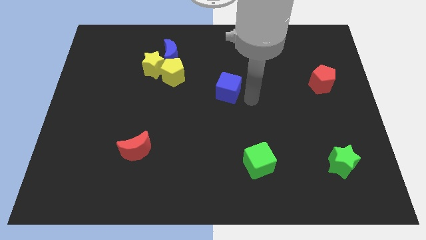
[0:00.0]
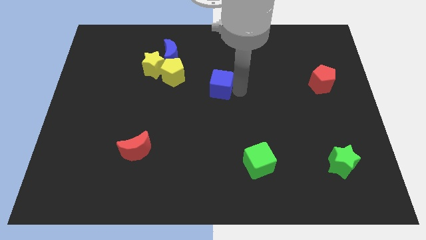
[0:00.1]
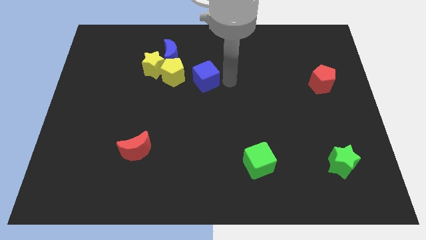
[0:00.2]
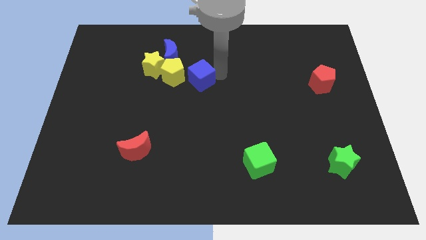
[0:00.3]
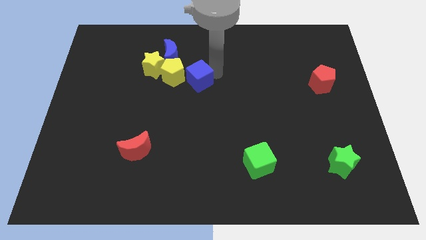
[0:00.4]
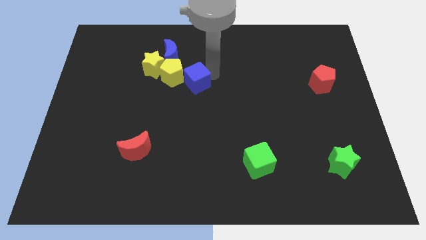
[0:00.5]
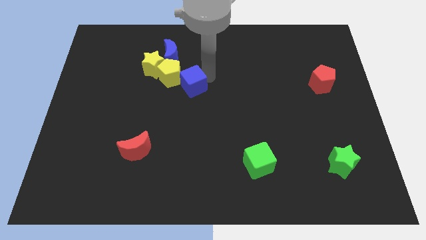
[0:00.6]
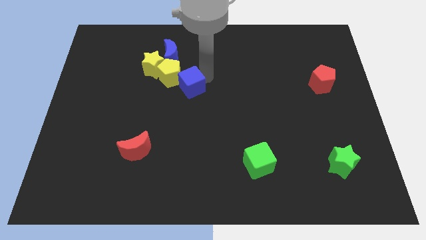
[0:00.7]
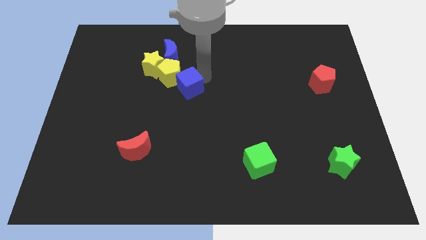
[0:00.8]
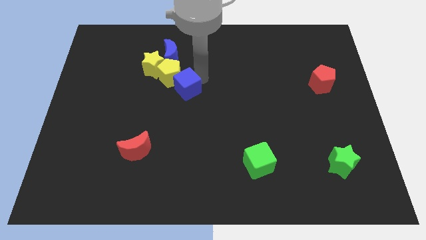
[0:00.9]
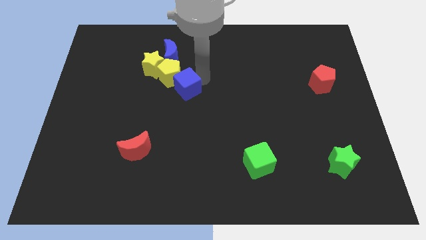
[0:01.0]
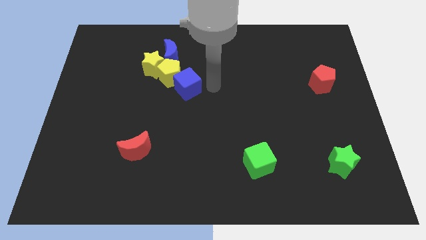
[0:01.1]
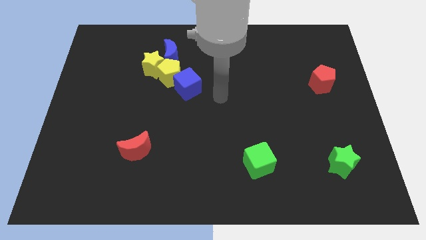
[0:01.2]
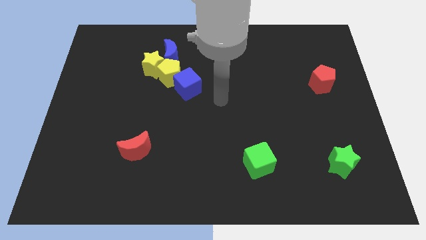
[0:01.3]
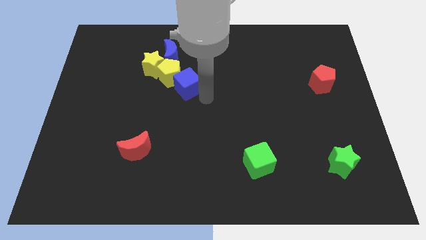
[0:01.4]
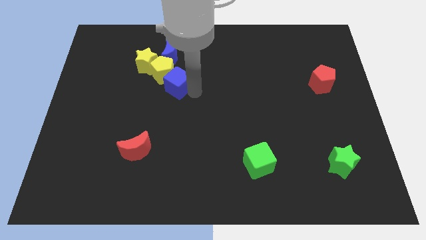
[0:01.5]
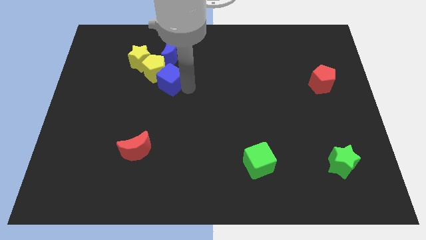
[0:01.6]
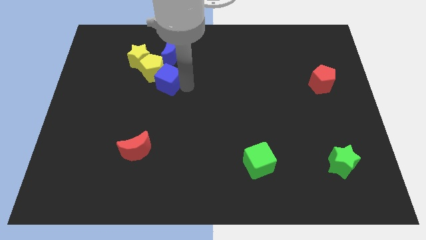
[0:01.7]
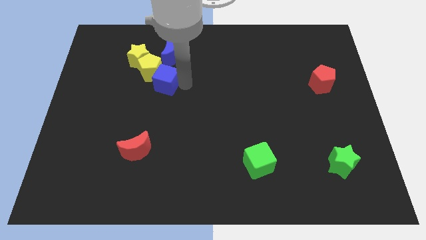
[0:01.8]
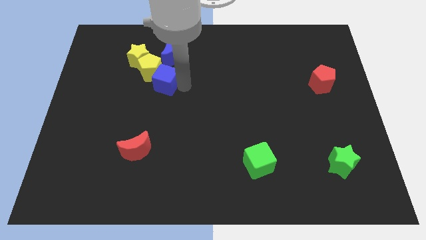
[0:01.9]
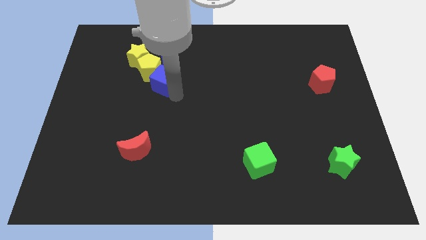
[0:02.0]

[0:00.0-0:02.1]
push the blue cube into the yellow pentagon

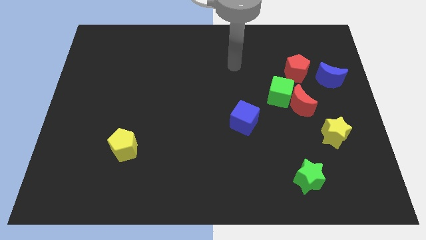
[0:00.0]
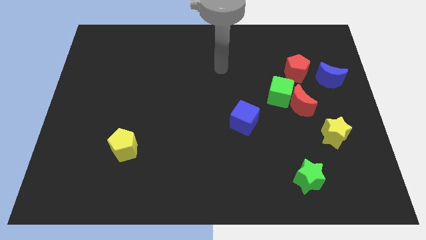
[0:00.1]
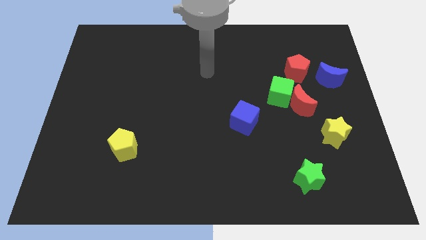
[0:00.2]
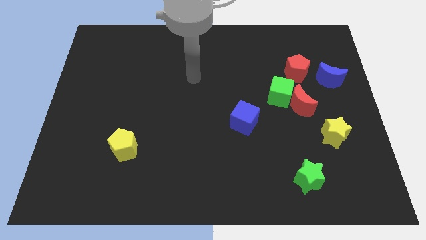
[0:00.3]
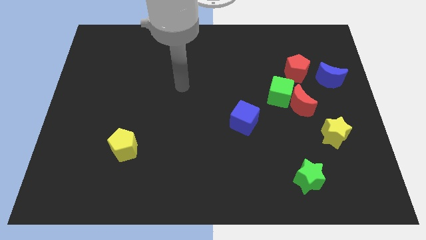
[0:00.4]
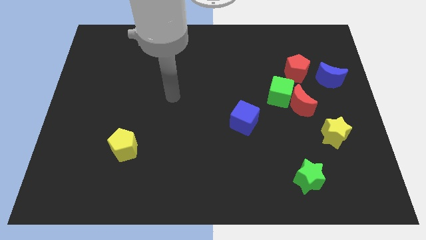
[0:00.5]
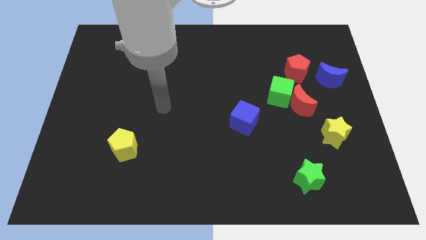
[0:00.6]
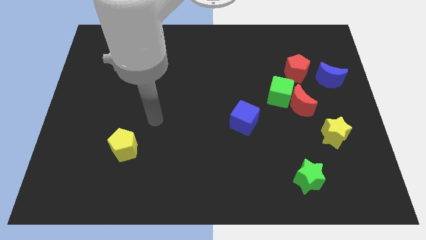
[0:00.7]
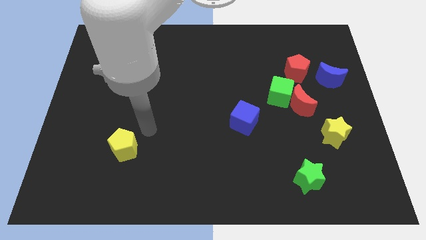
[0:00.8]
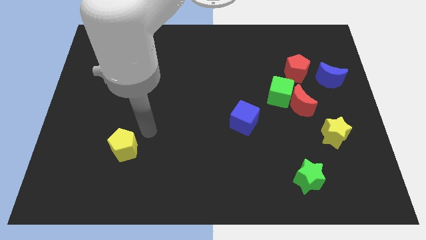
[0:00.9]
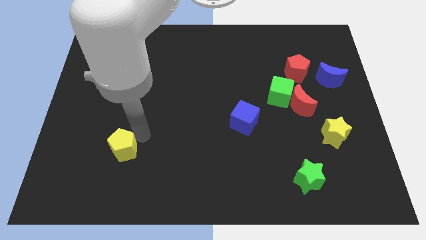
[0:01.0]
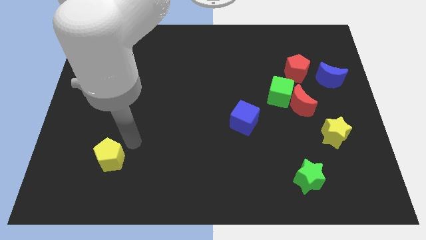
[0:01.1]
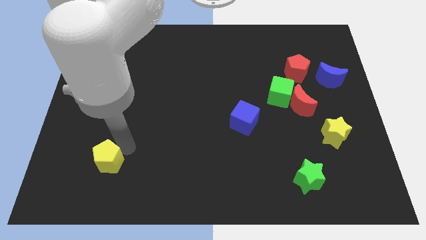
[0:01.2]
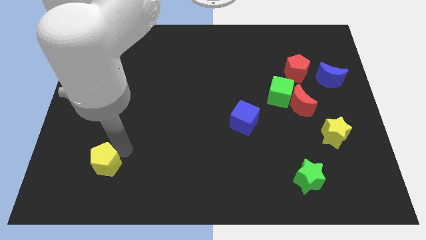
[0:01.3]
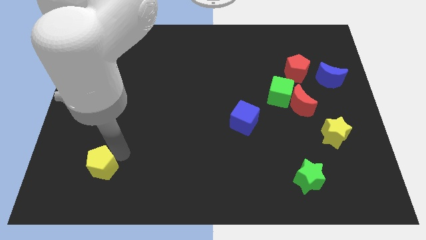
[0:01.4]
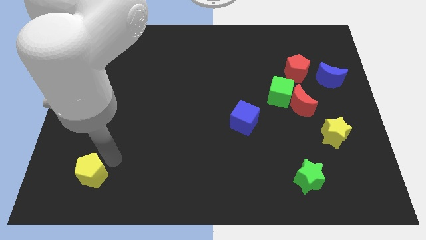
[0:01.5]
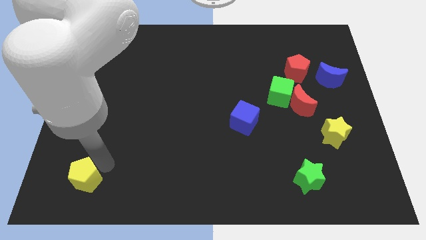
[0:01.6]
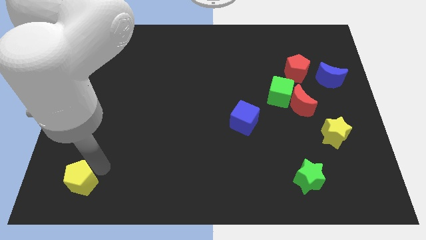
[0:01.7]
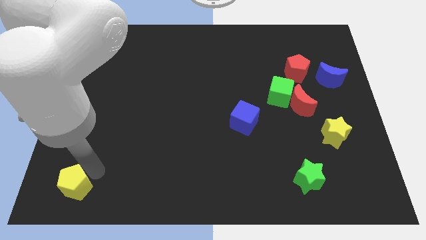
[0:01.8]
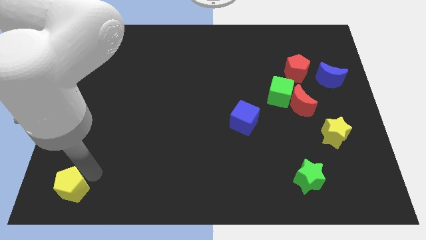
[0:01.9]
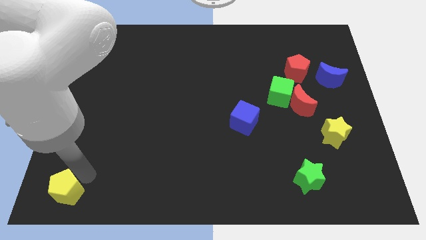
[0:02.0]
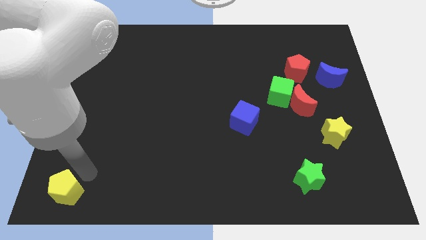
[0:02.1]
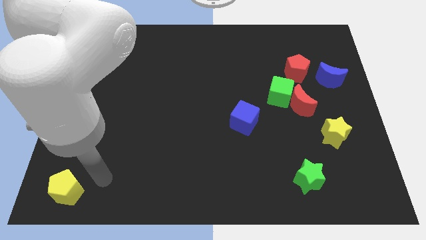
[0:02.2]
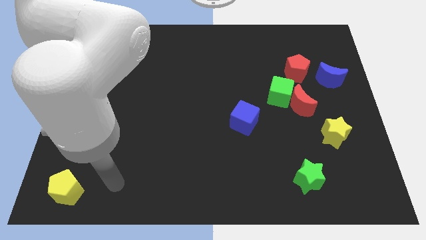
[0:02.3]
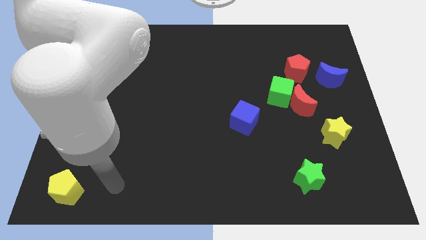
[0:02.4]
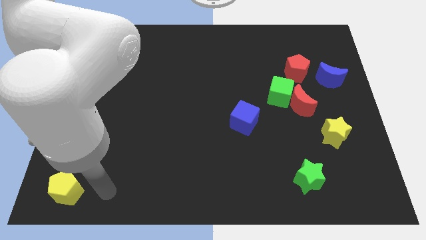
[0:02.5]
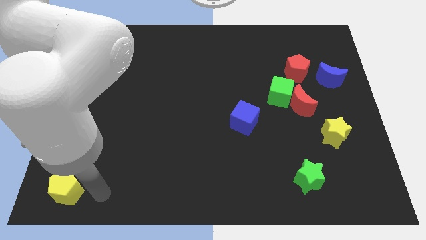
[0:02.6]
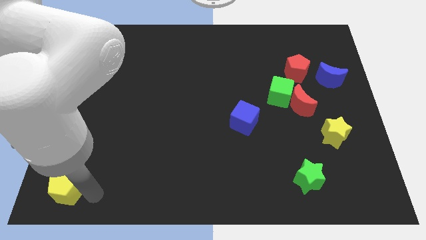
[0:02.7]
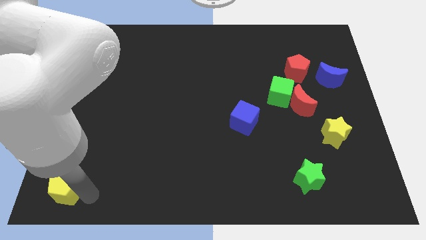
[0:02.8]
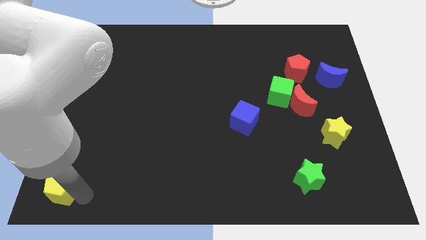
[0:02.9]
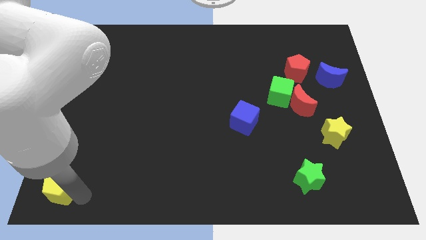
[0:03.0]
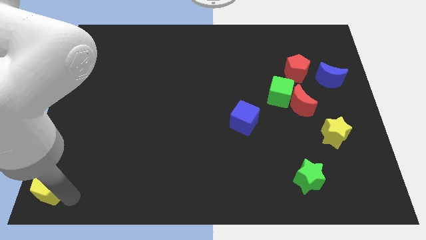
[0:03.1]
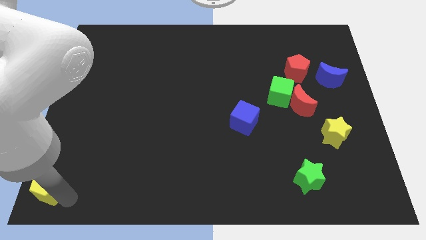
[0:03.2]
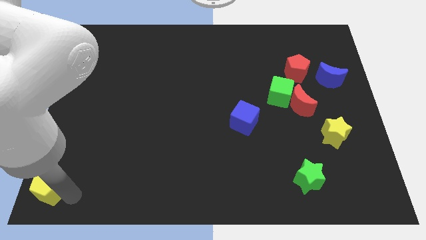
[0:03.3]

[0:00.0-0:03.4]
move the yellow pentagon towards the bottom left of the board

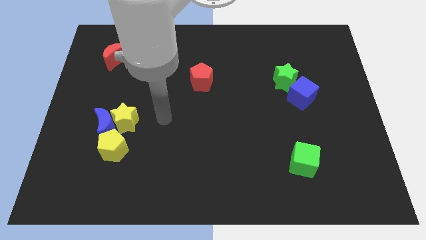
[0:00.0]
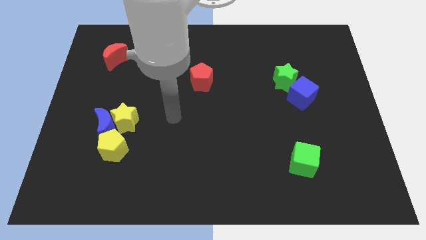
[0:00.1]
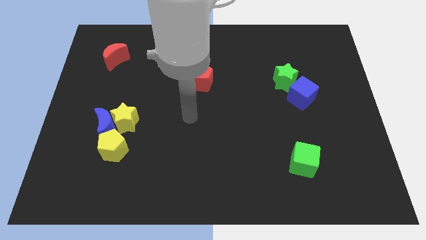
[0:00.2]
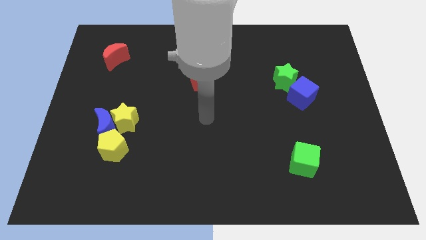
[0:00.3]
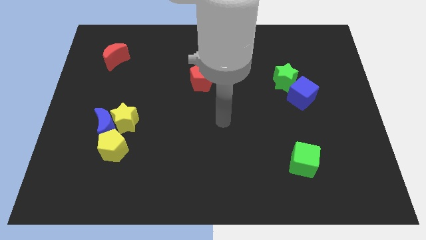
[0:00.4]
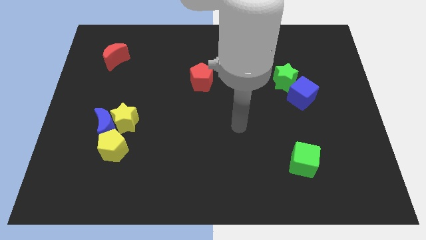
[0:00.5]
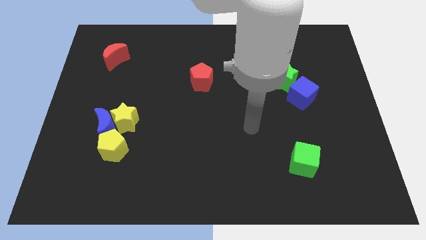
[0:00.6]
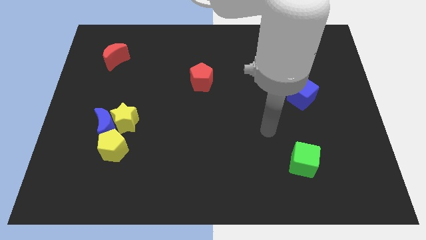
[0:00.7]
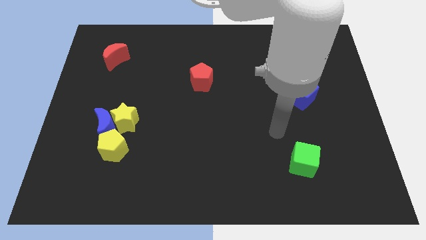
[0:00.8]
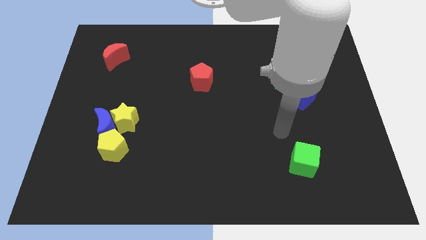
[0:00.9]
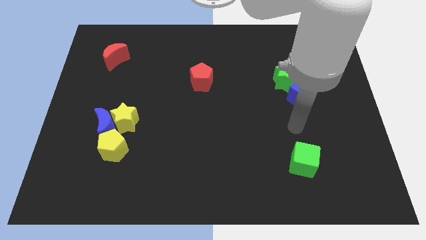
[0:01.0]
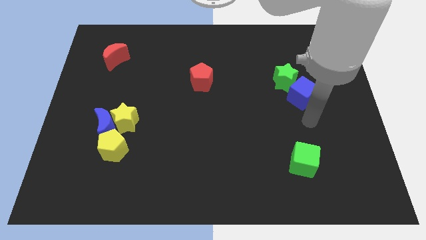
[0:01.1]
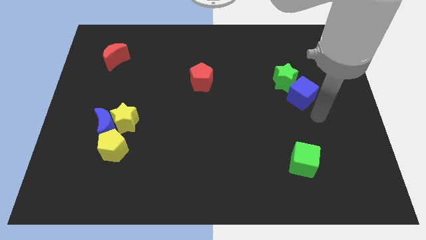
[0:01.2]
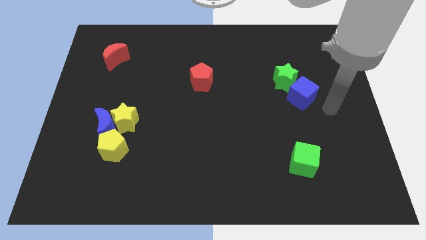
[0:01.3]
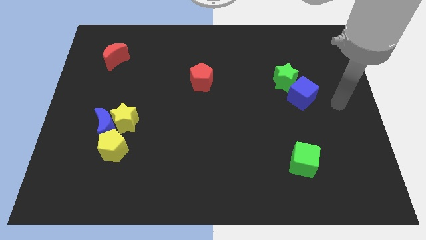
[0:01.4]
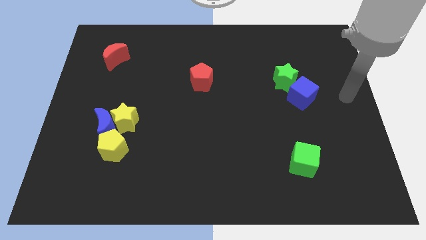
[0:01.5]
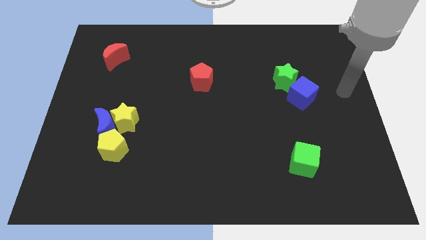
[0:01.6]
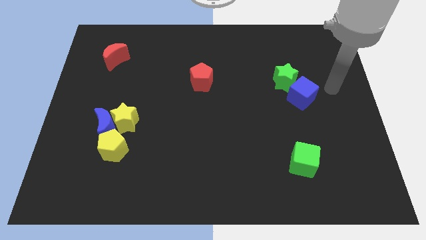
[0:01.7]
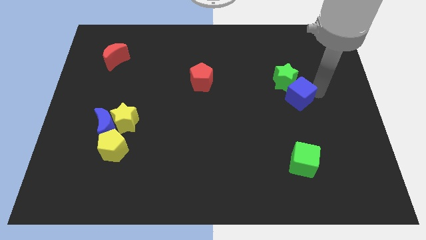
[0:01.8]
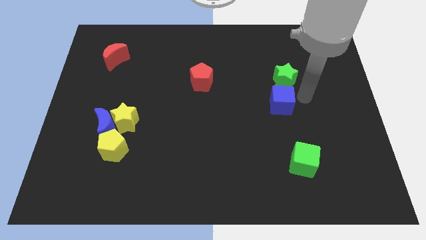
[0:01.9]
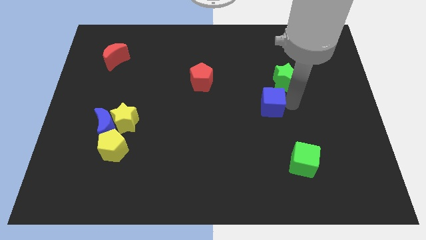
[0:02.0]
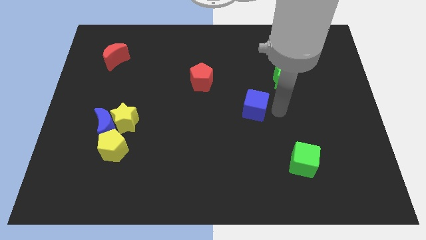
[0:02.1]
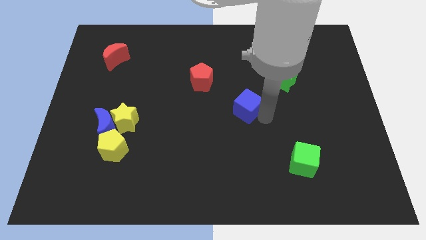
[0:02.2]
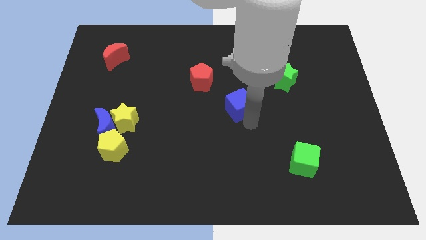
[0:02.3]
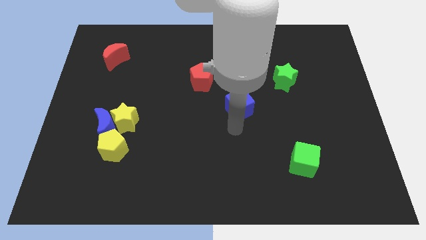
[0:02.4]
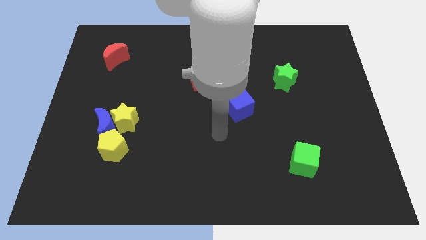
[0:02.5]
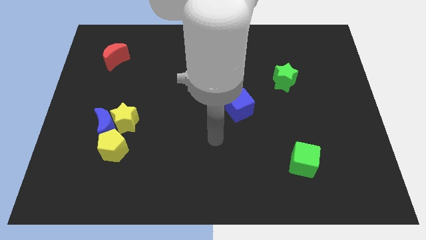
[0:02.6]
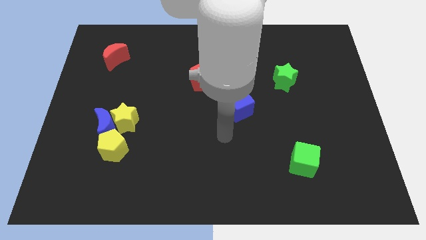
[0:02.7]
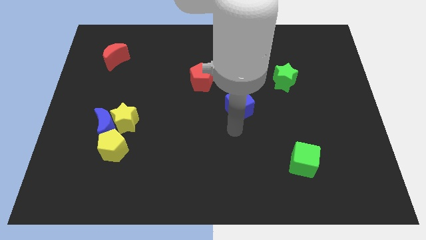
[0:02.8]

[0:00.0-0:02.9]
push the blue cube to the bottom left of the green star

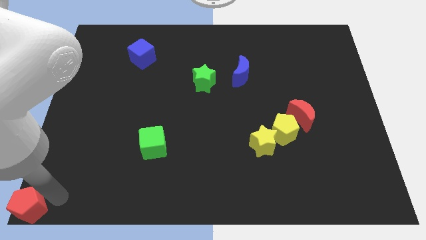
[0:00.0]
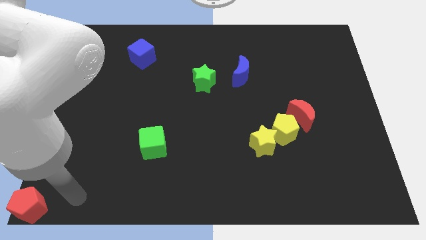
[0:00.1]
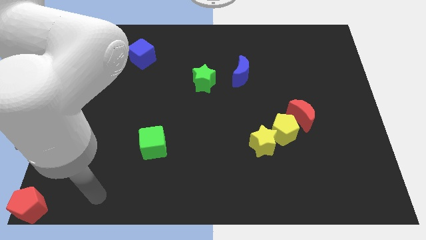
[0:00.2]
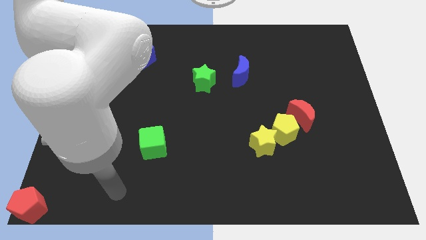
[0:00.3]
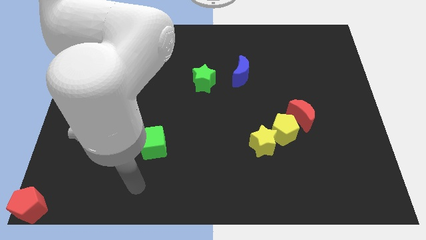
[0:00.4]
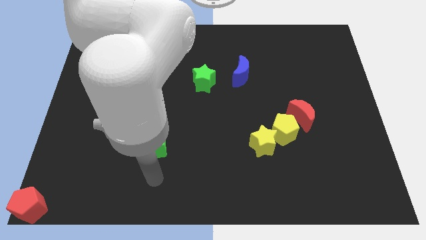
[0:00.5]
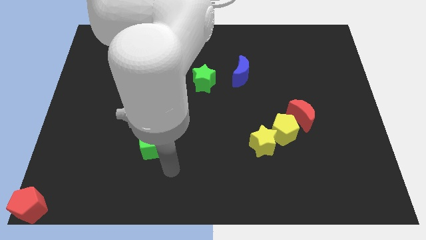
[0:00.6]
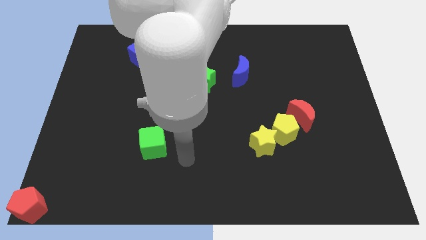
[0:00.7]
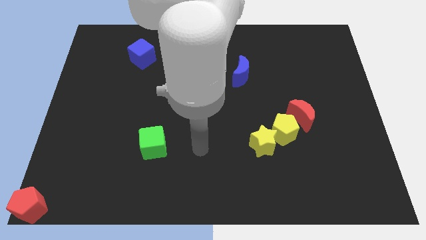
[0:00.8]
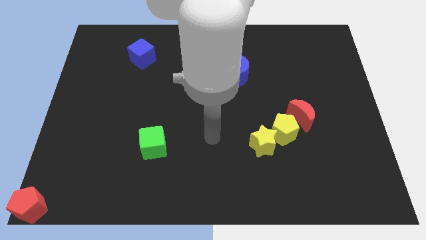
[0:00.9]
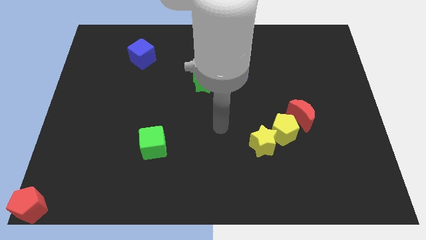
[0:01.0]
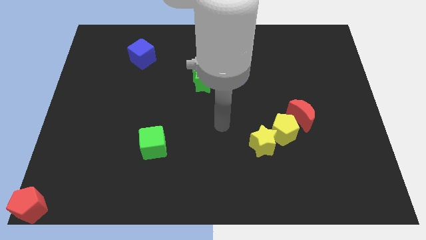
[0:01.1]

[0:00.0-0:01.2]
place your hand to right side of the green cube
